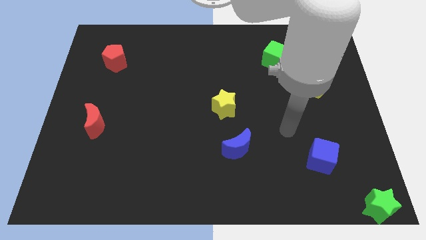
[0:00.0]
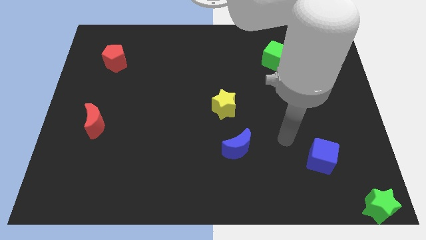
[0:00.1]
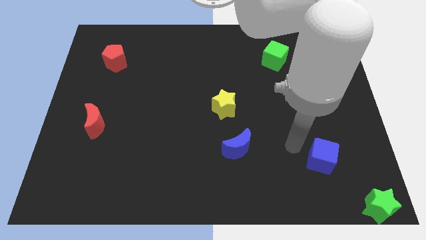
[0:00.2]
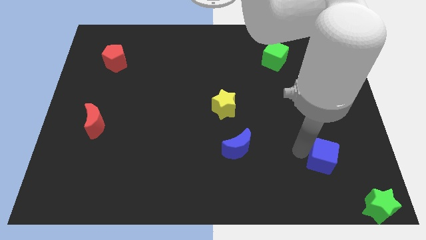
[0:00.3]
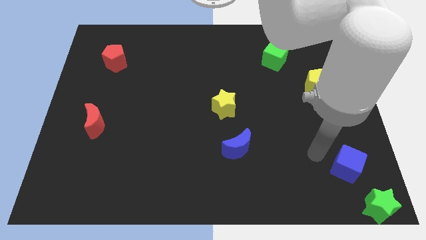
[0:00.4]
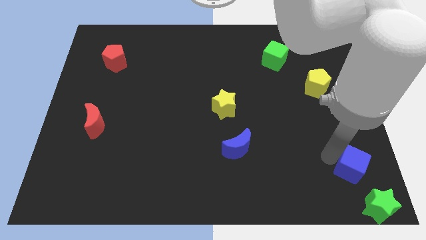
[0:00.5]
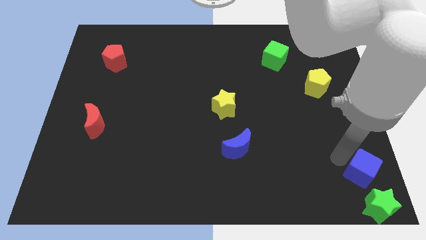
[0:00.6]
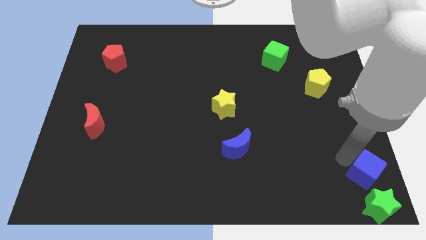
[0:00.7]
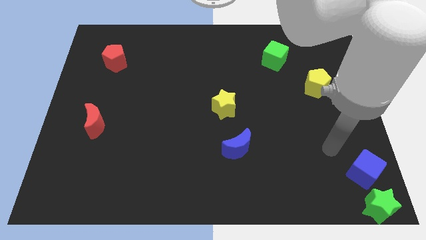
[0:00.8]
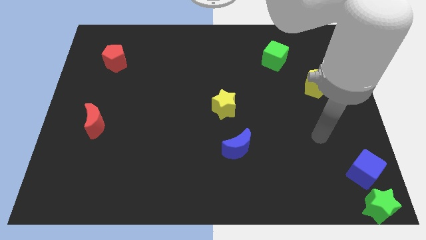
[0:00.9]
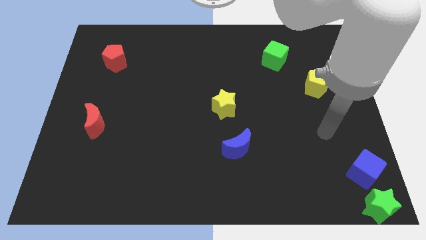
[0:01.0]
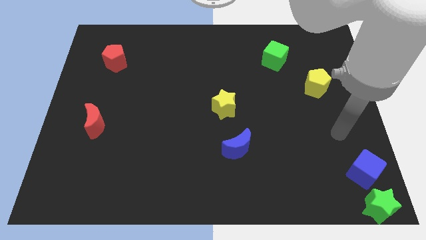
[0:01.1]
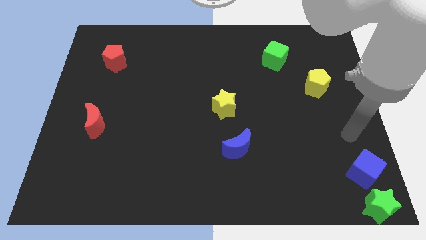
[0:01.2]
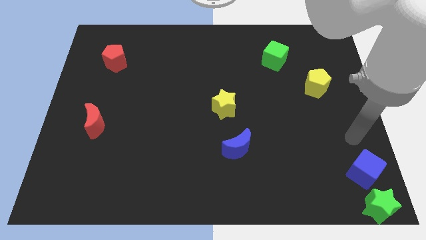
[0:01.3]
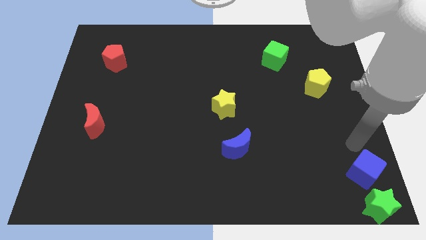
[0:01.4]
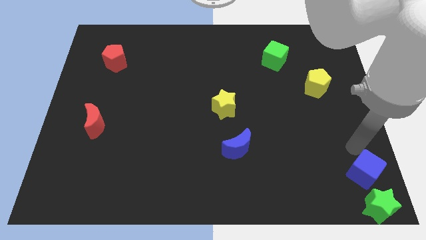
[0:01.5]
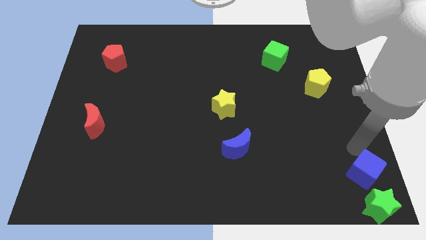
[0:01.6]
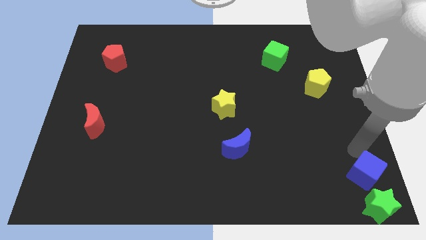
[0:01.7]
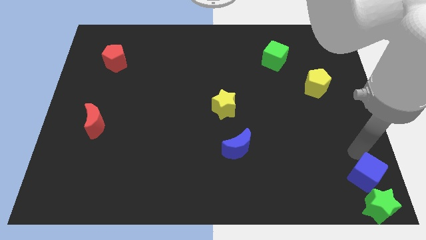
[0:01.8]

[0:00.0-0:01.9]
place the blue cube above the green star

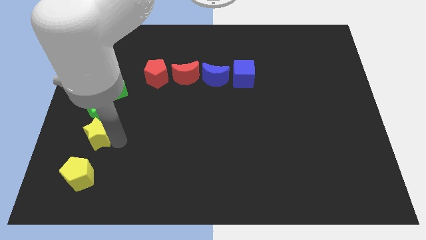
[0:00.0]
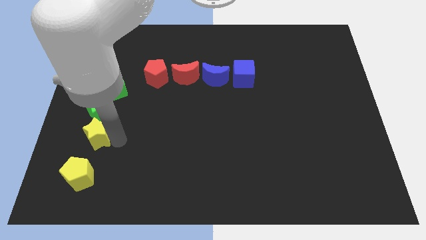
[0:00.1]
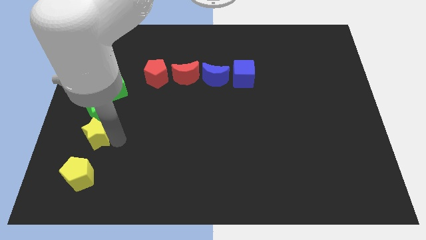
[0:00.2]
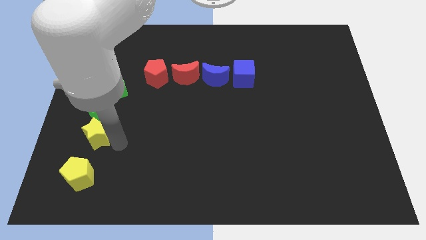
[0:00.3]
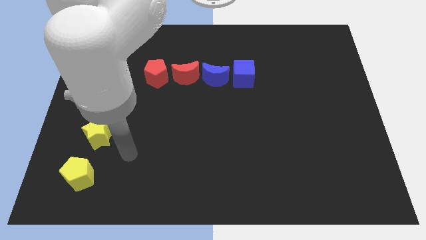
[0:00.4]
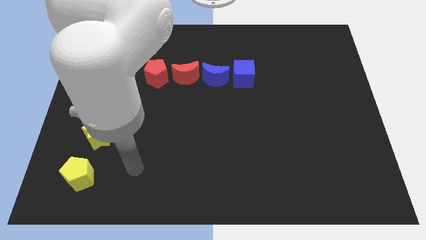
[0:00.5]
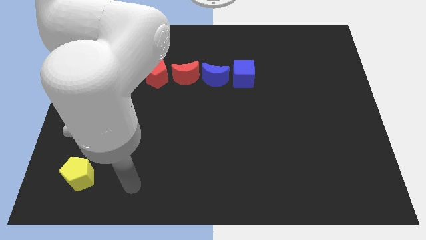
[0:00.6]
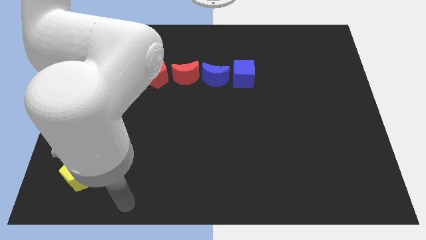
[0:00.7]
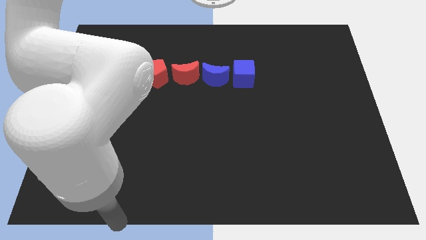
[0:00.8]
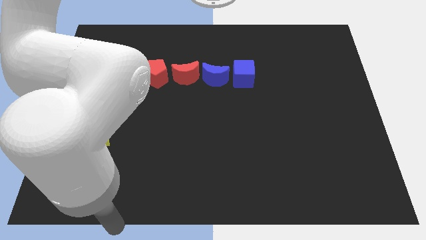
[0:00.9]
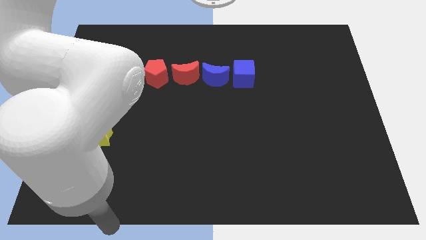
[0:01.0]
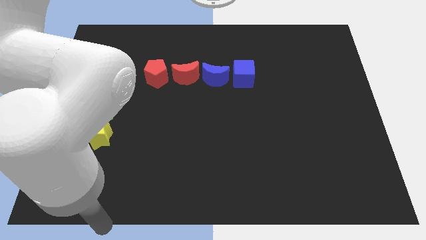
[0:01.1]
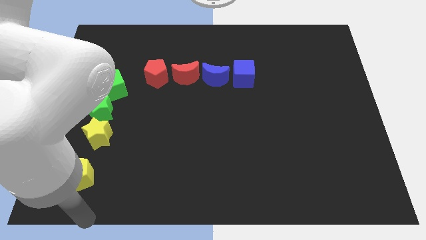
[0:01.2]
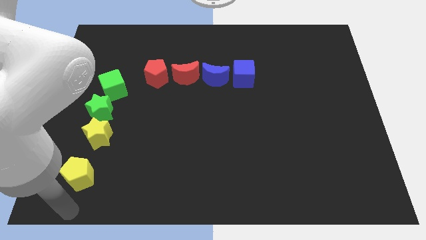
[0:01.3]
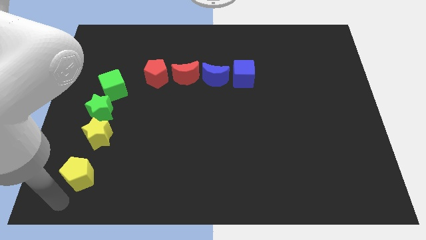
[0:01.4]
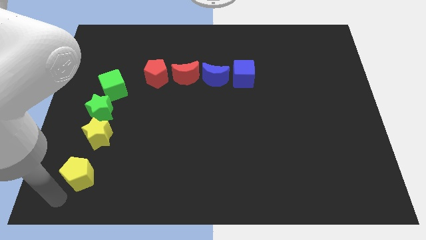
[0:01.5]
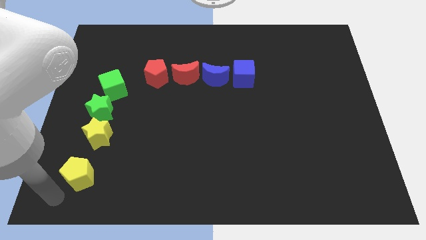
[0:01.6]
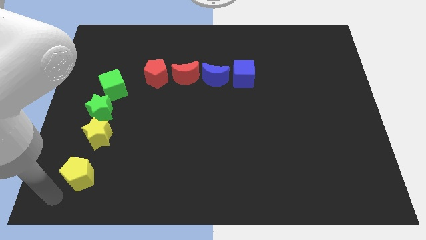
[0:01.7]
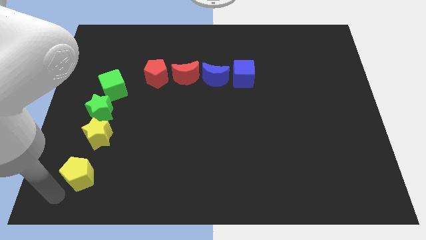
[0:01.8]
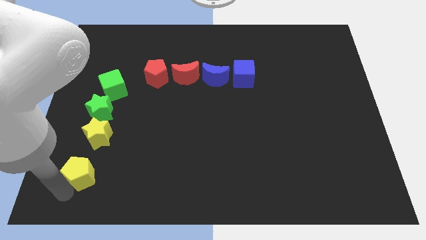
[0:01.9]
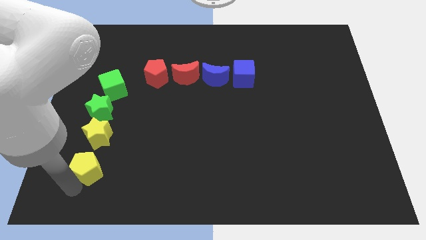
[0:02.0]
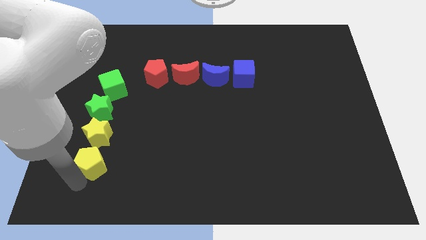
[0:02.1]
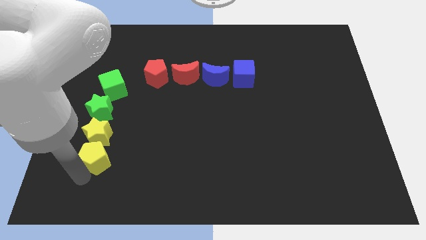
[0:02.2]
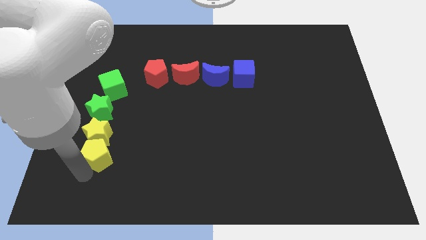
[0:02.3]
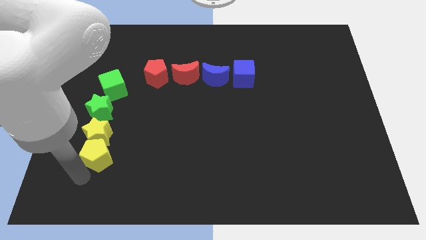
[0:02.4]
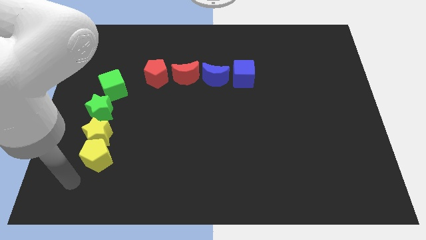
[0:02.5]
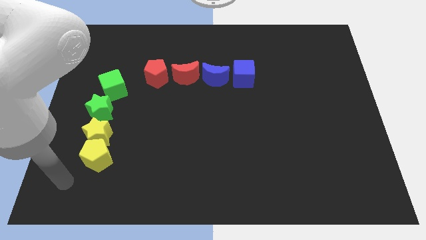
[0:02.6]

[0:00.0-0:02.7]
move the yellow pentagon to the yellow star

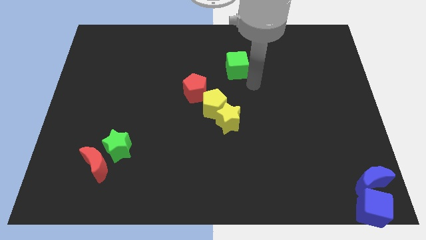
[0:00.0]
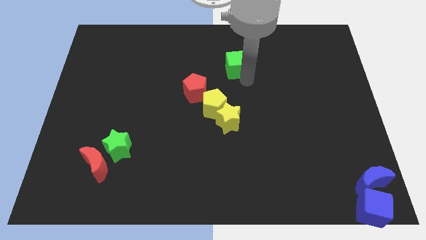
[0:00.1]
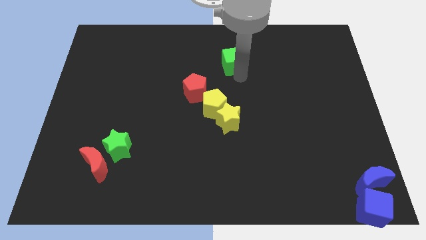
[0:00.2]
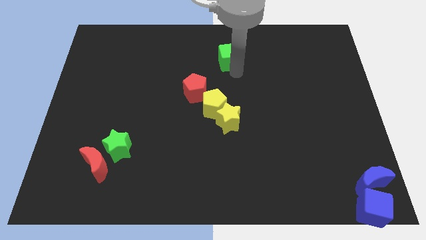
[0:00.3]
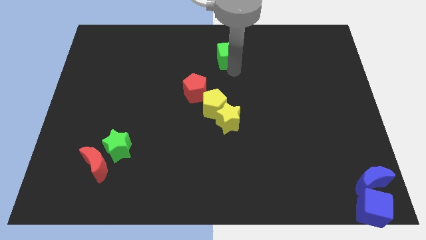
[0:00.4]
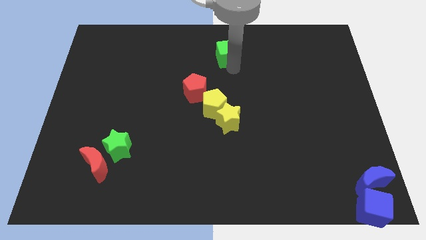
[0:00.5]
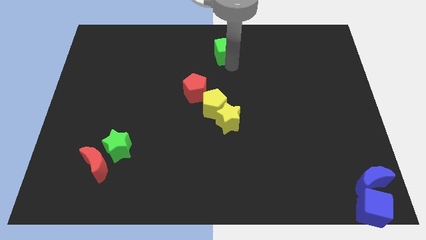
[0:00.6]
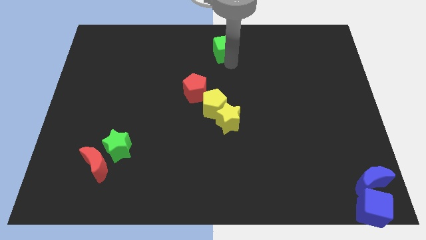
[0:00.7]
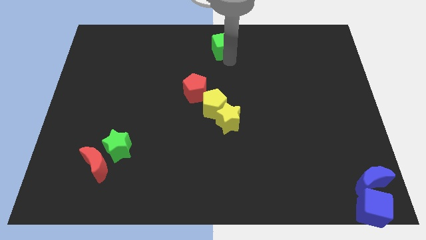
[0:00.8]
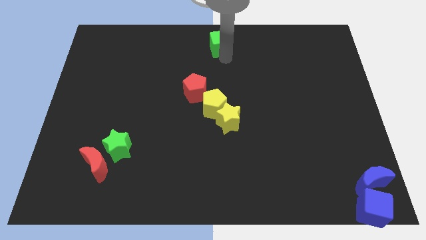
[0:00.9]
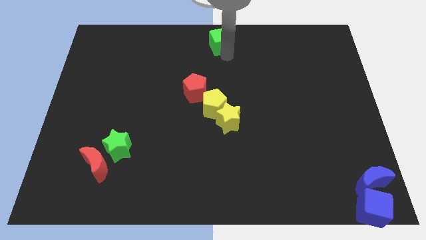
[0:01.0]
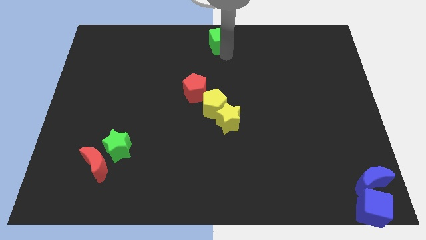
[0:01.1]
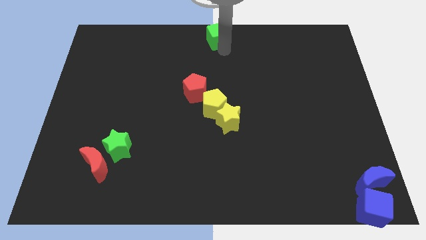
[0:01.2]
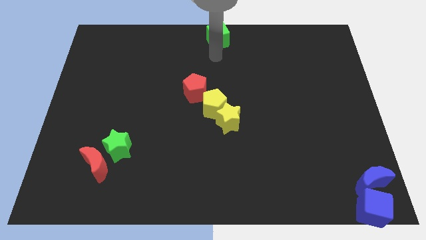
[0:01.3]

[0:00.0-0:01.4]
move the green cube to the top center of the board

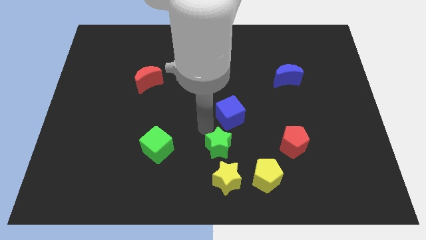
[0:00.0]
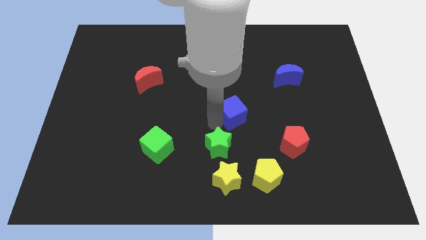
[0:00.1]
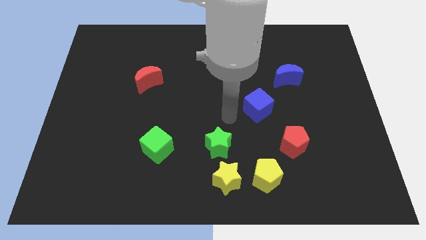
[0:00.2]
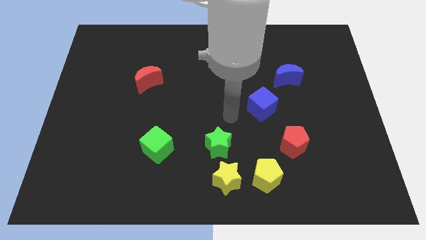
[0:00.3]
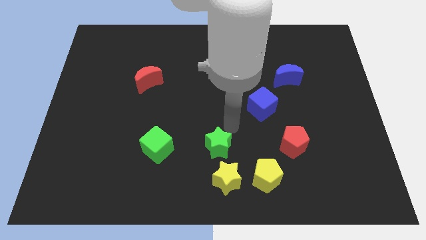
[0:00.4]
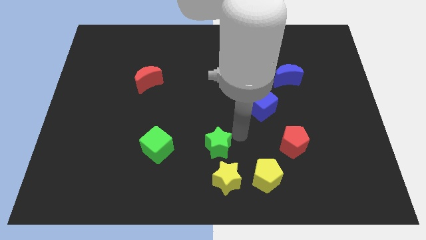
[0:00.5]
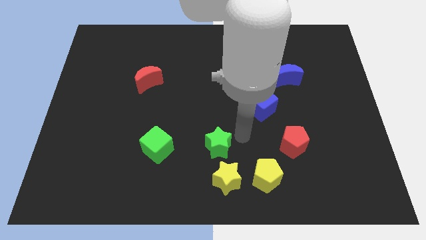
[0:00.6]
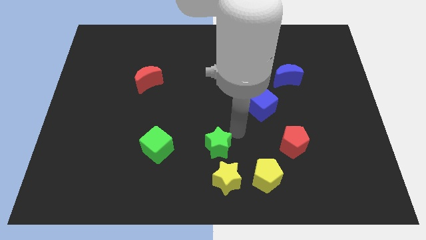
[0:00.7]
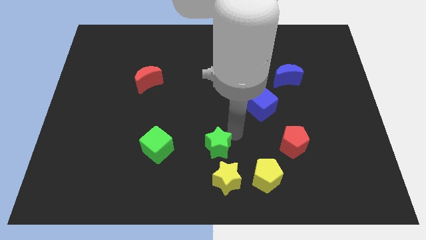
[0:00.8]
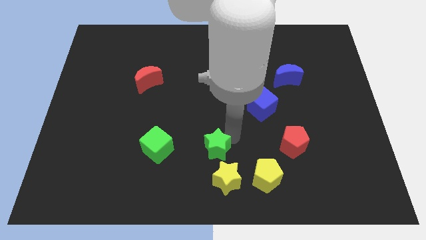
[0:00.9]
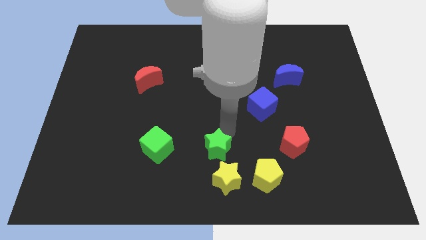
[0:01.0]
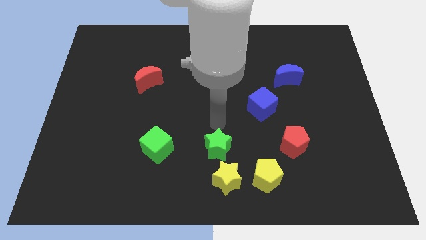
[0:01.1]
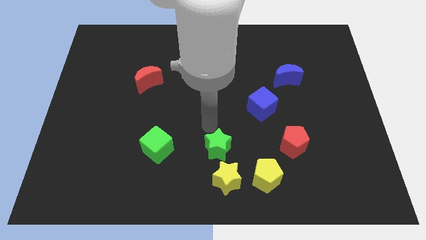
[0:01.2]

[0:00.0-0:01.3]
move the green star above the yellow star

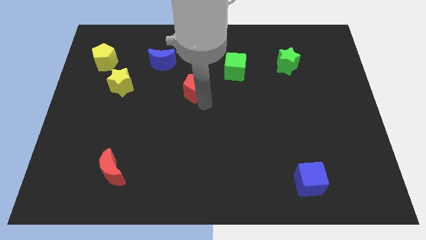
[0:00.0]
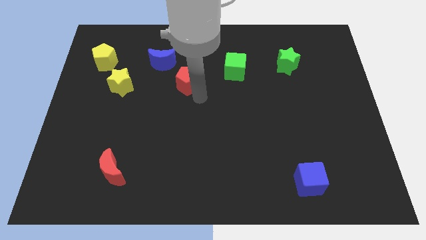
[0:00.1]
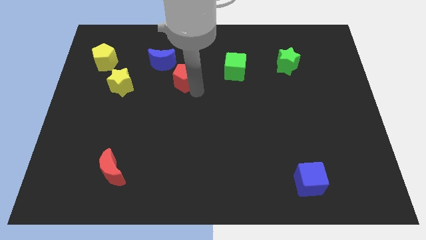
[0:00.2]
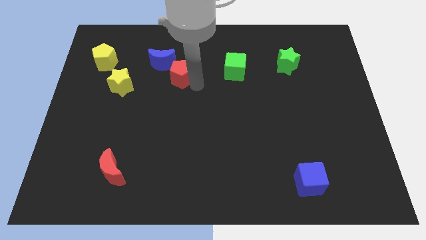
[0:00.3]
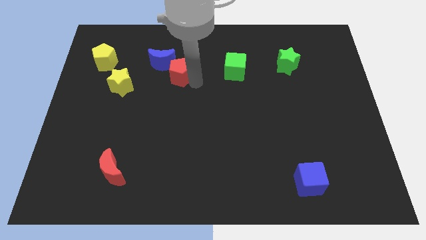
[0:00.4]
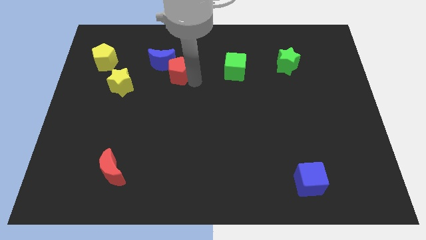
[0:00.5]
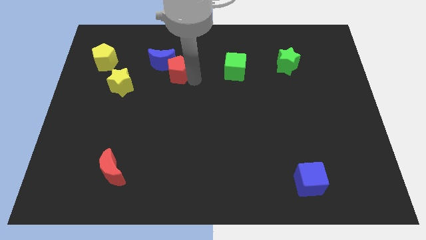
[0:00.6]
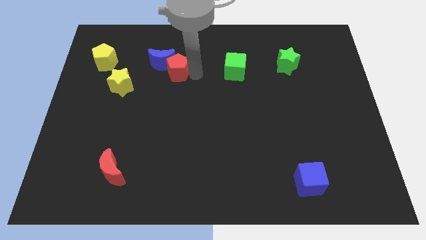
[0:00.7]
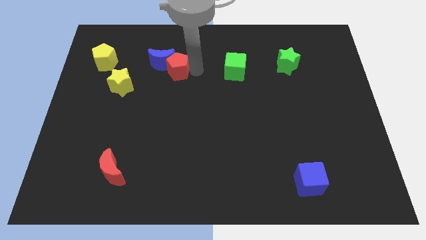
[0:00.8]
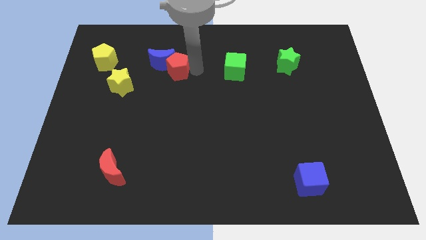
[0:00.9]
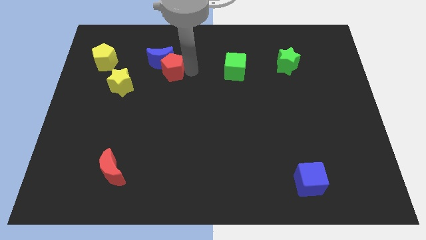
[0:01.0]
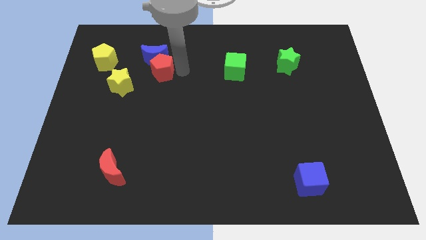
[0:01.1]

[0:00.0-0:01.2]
move the red pentagon to the bottom of the blue crescent

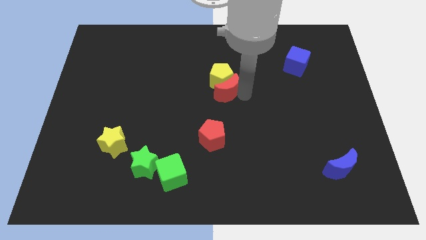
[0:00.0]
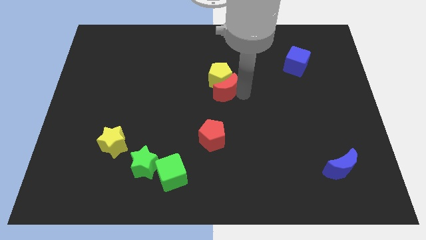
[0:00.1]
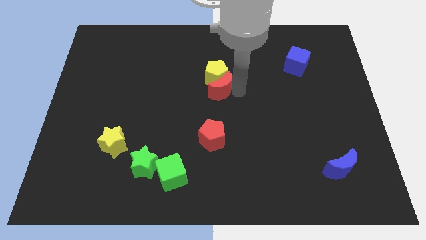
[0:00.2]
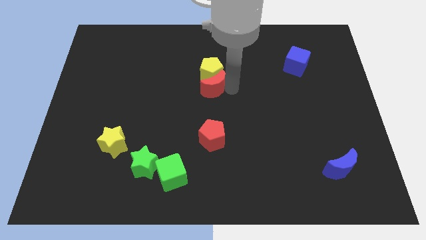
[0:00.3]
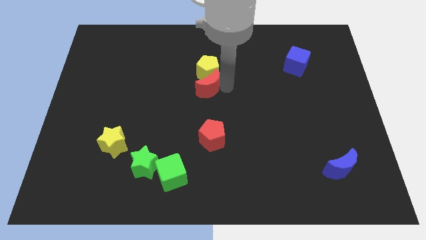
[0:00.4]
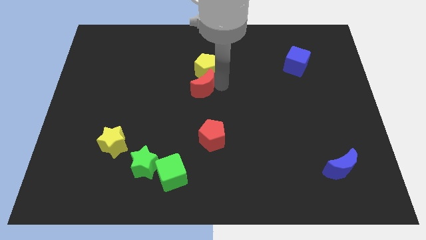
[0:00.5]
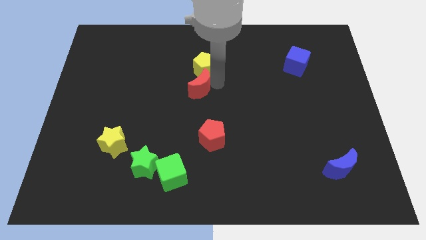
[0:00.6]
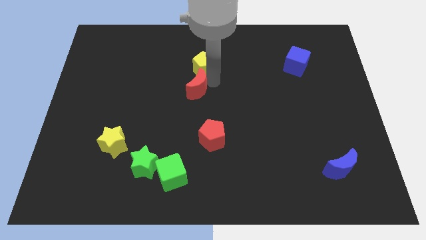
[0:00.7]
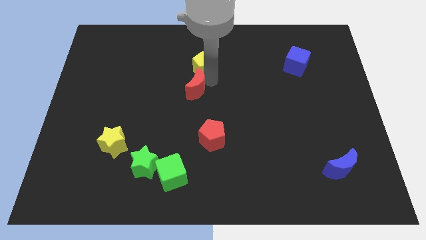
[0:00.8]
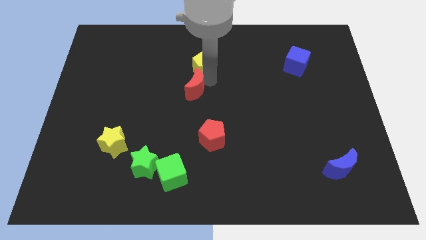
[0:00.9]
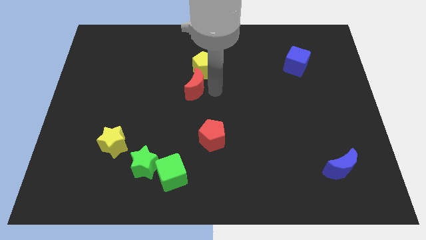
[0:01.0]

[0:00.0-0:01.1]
push yellow pentagon with the red crescent towards the center of the board
